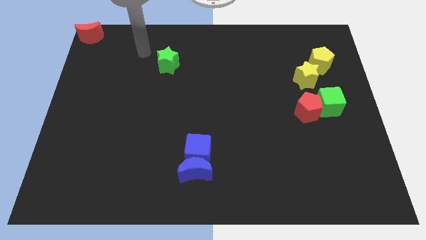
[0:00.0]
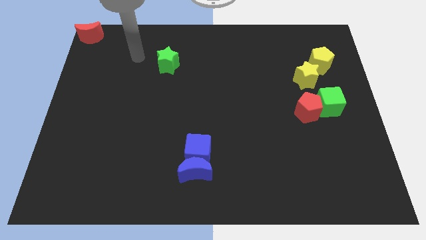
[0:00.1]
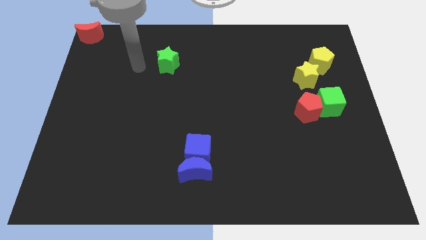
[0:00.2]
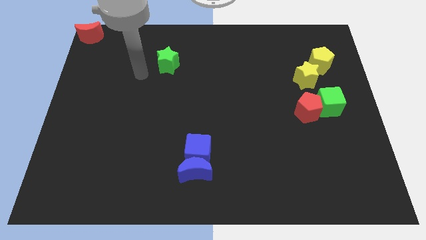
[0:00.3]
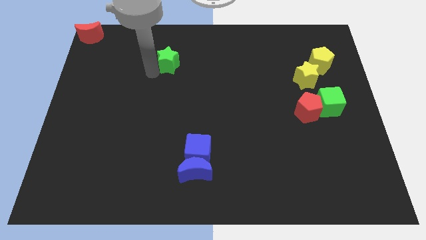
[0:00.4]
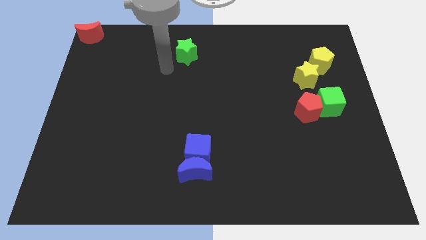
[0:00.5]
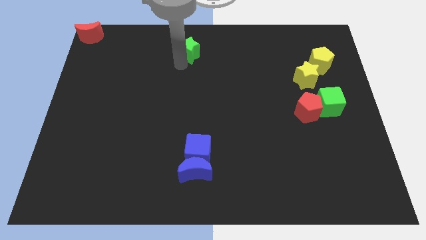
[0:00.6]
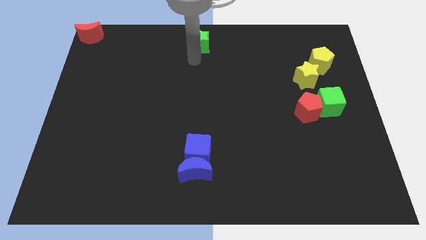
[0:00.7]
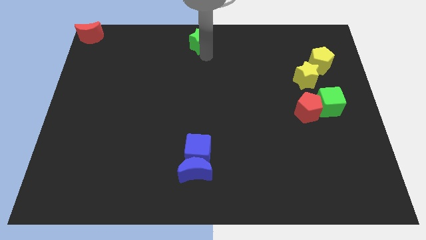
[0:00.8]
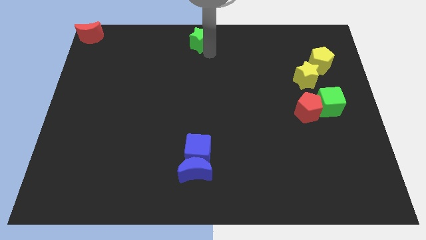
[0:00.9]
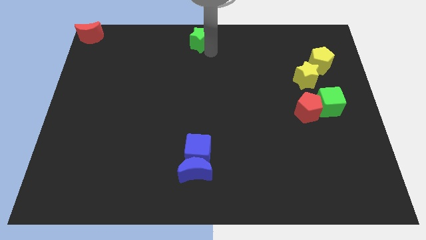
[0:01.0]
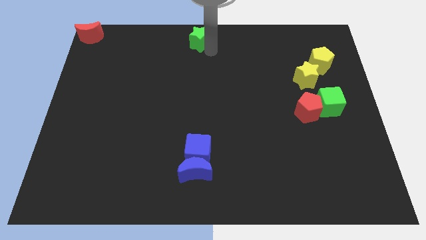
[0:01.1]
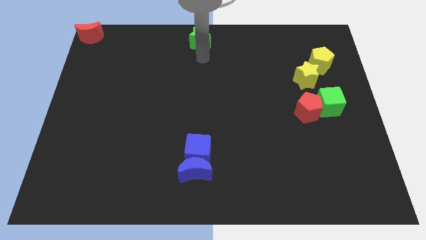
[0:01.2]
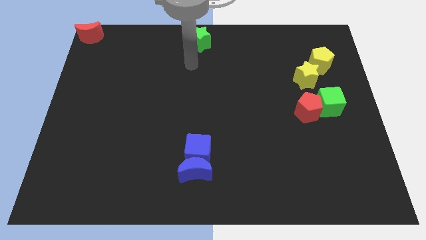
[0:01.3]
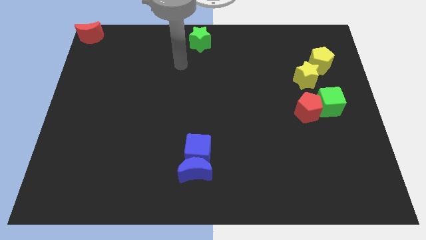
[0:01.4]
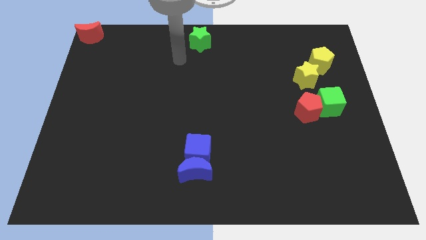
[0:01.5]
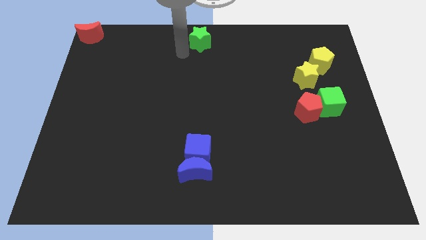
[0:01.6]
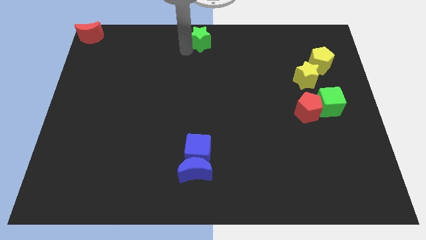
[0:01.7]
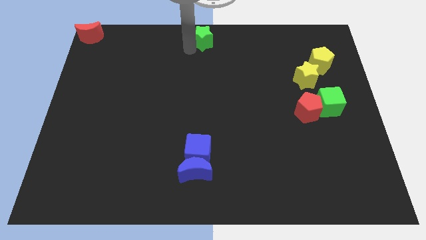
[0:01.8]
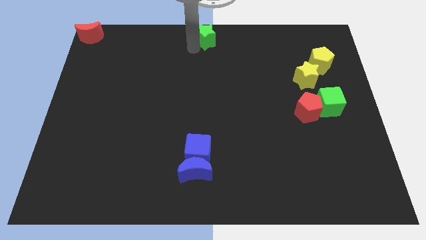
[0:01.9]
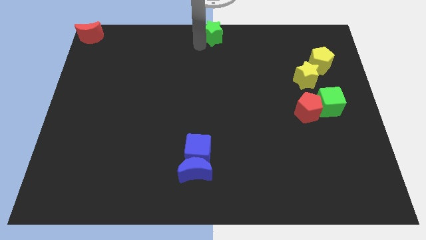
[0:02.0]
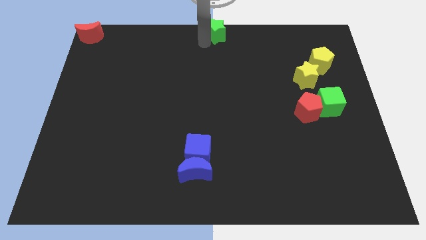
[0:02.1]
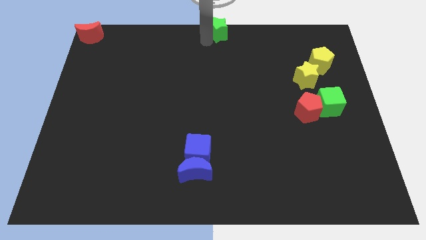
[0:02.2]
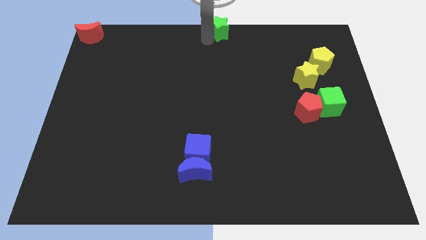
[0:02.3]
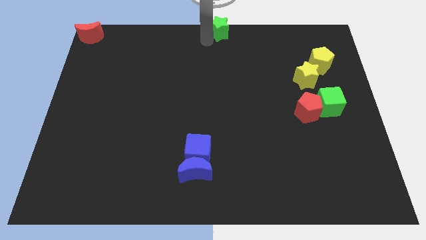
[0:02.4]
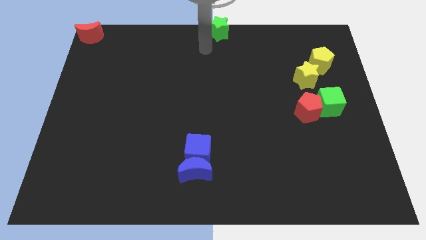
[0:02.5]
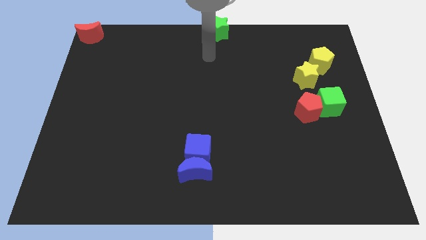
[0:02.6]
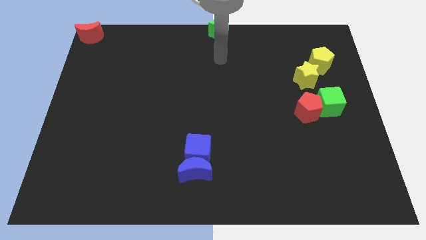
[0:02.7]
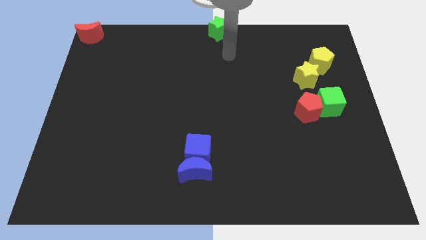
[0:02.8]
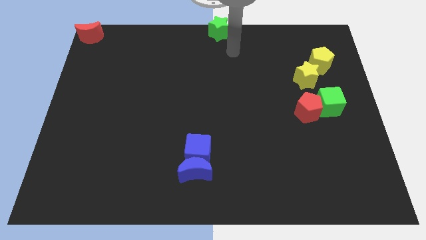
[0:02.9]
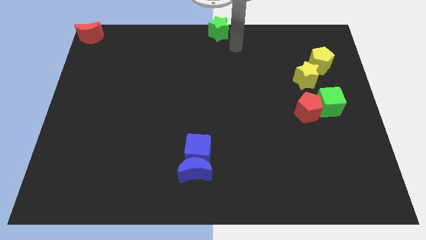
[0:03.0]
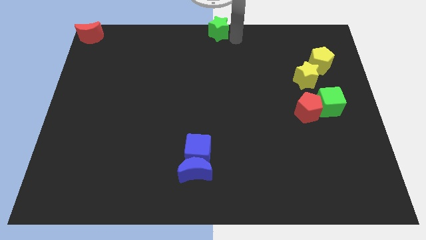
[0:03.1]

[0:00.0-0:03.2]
place green star to the top center of the board

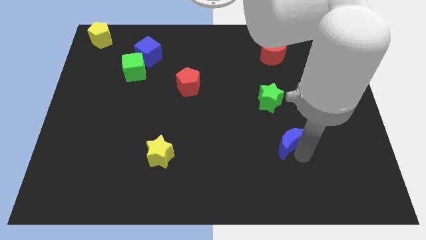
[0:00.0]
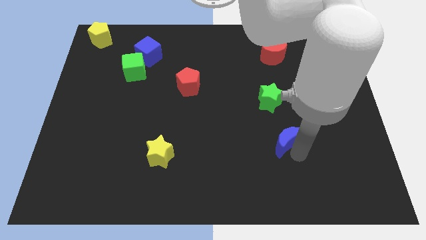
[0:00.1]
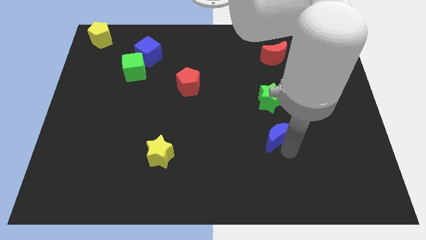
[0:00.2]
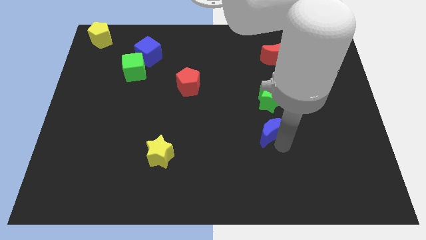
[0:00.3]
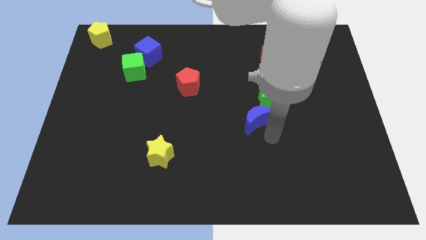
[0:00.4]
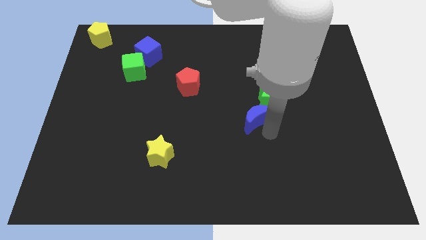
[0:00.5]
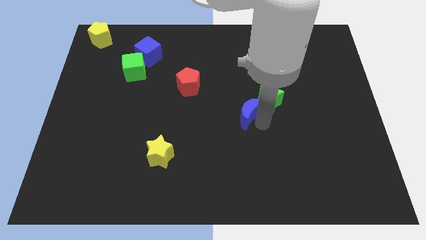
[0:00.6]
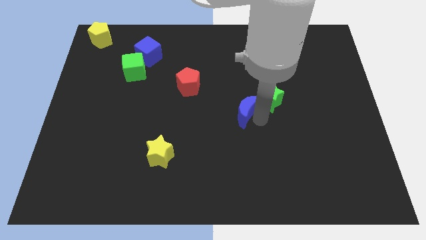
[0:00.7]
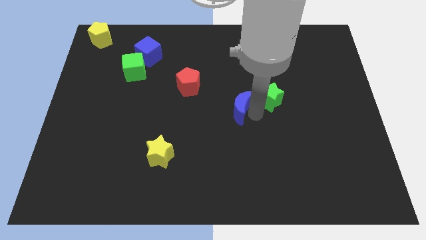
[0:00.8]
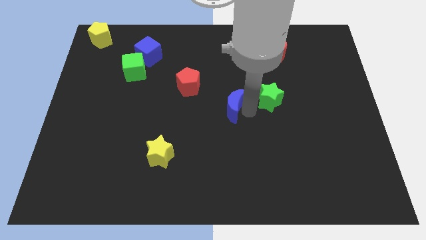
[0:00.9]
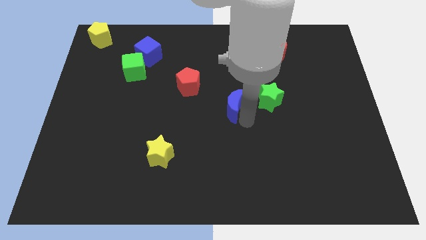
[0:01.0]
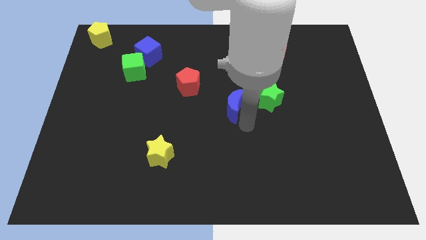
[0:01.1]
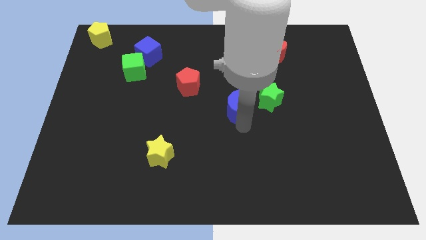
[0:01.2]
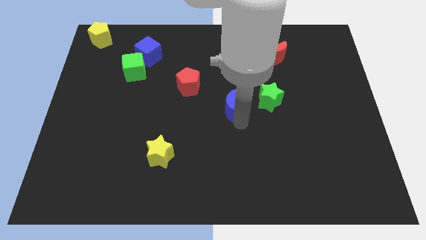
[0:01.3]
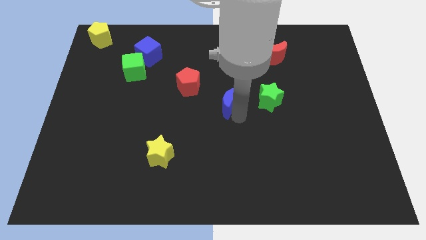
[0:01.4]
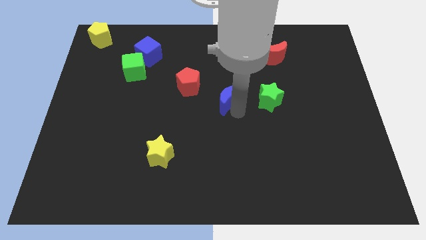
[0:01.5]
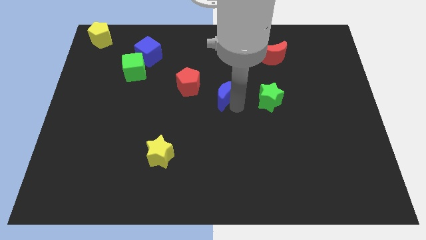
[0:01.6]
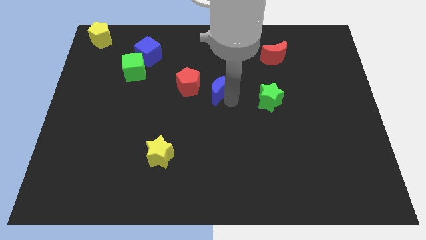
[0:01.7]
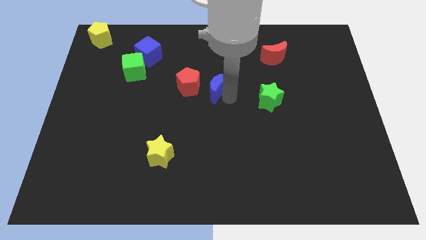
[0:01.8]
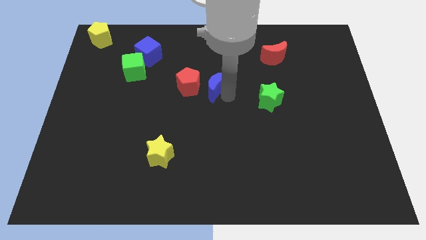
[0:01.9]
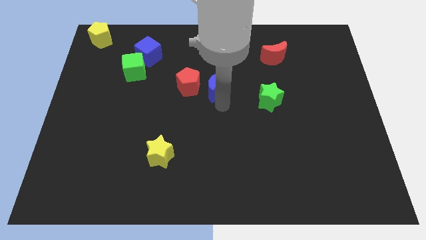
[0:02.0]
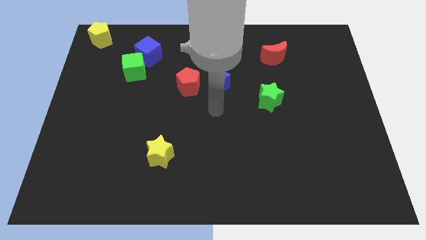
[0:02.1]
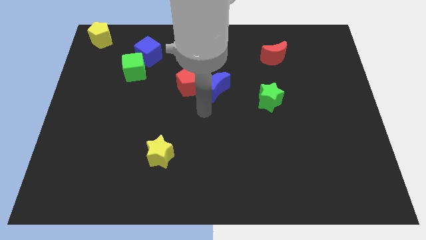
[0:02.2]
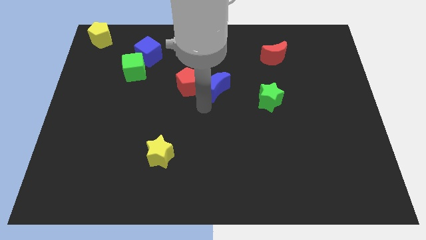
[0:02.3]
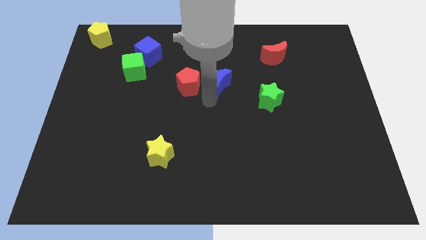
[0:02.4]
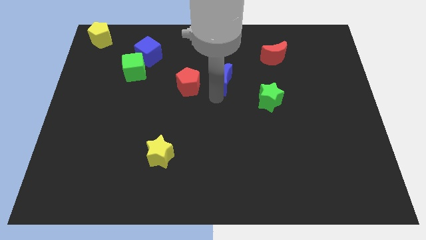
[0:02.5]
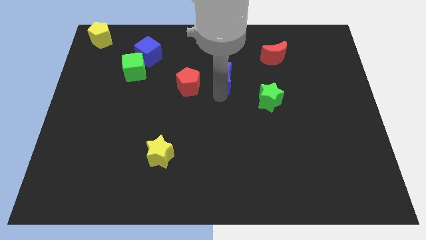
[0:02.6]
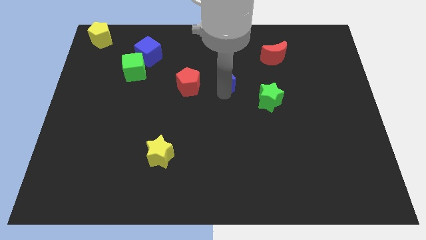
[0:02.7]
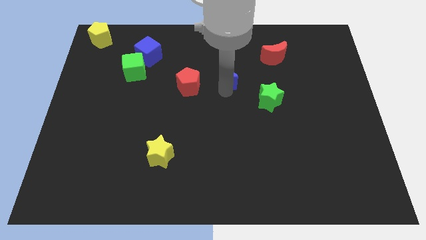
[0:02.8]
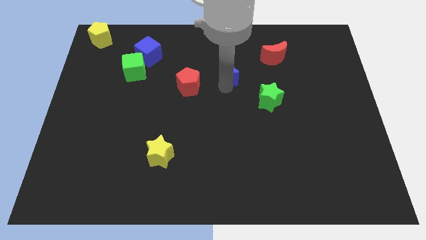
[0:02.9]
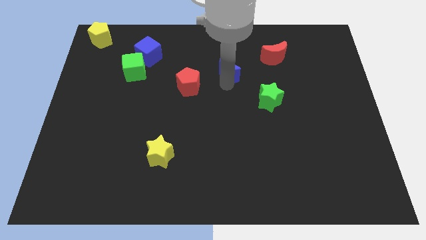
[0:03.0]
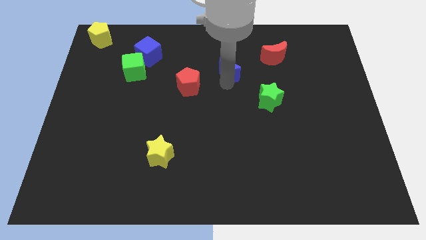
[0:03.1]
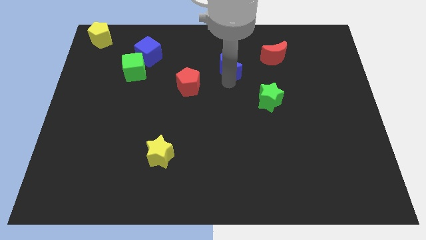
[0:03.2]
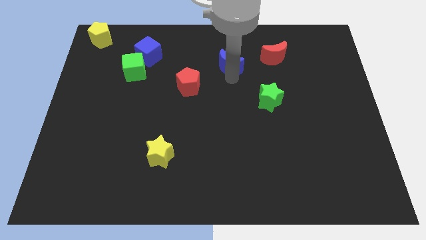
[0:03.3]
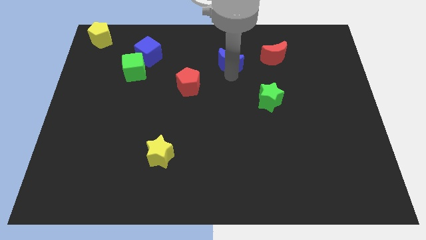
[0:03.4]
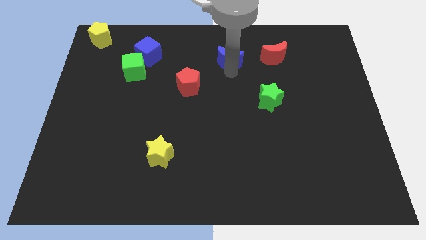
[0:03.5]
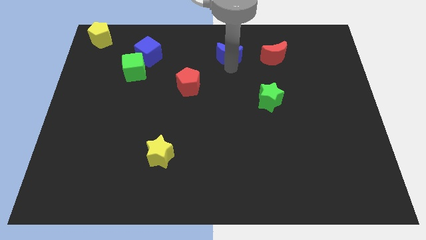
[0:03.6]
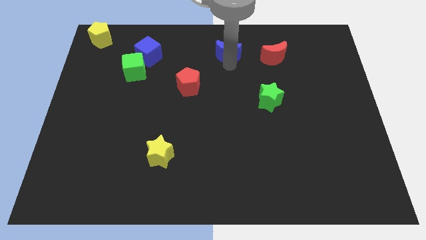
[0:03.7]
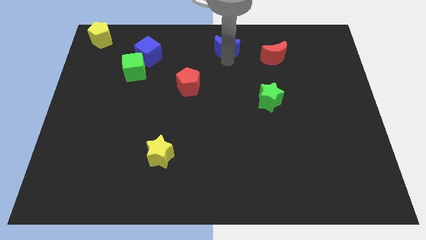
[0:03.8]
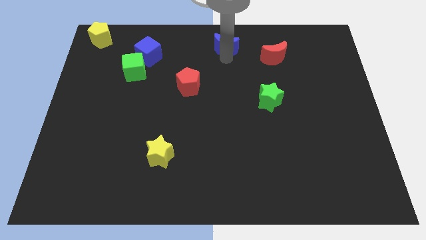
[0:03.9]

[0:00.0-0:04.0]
place the blue crescent in between blue cube and red crescent

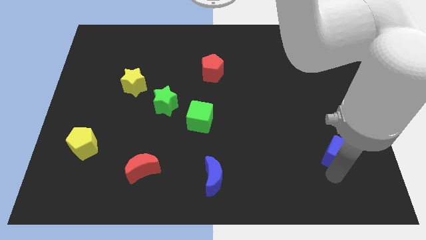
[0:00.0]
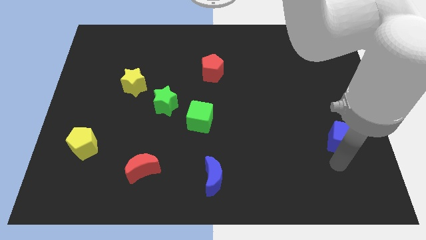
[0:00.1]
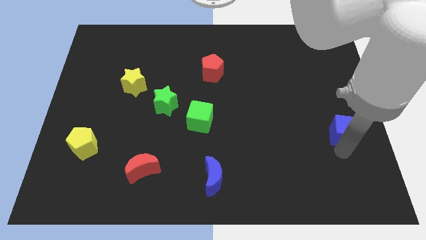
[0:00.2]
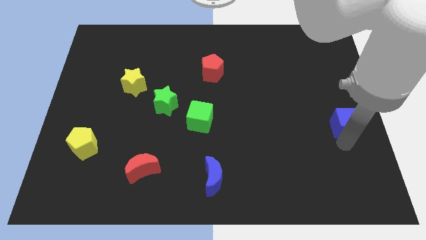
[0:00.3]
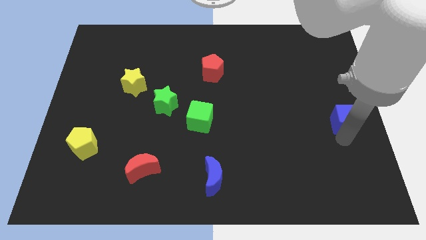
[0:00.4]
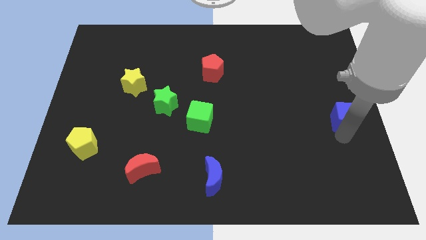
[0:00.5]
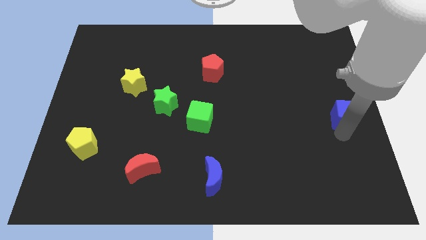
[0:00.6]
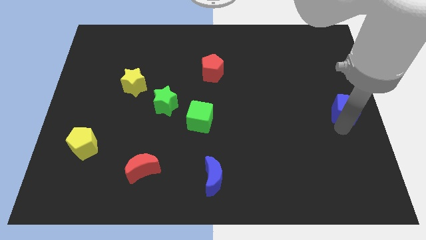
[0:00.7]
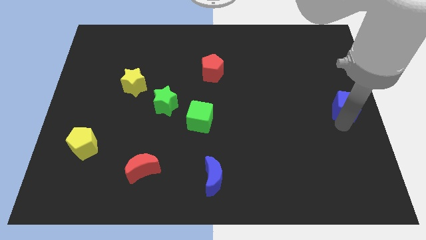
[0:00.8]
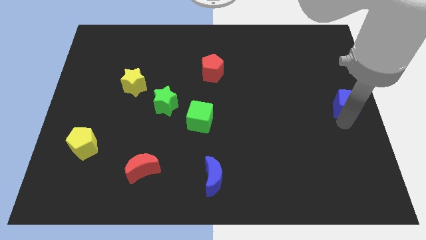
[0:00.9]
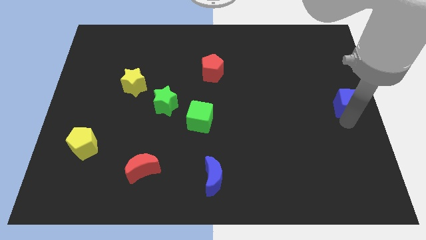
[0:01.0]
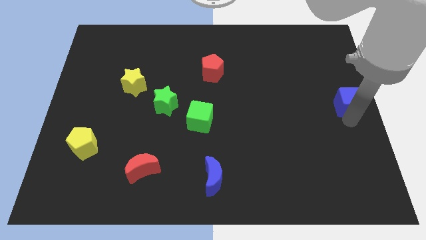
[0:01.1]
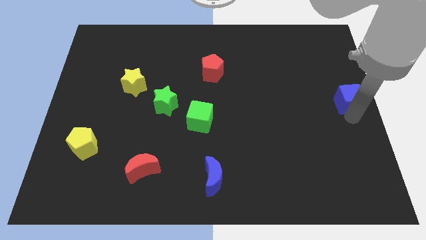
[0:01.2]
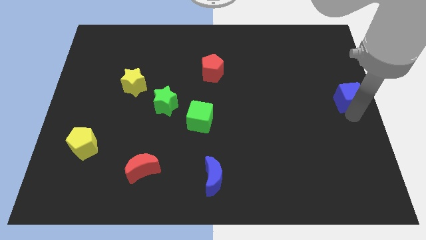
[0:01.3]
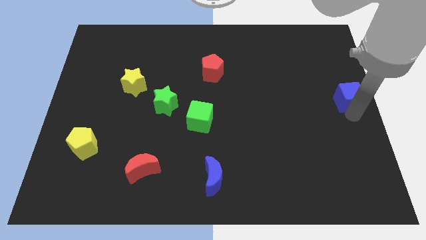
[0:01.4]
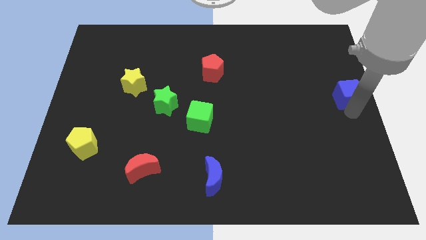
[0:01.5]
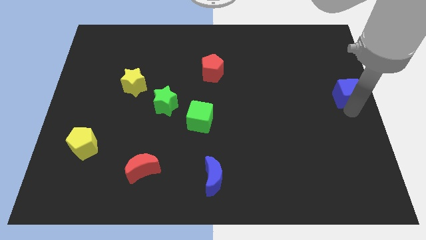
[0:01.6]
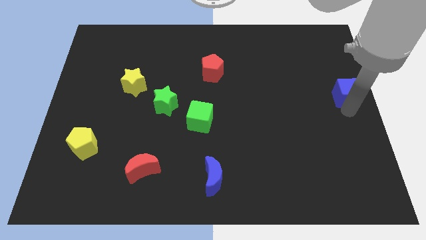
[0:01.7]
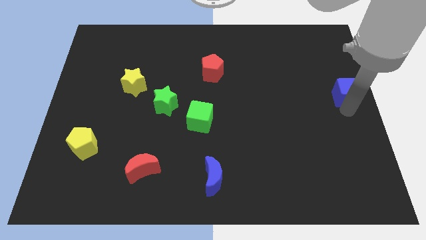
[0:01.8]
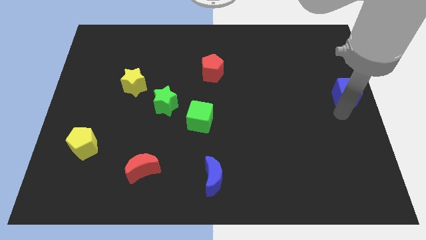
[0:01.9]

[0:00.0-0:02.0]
move the blue cube to the right center of the board
